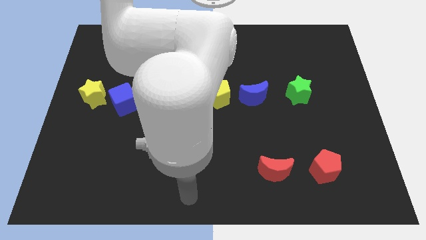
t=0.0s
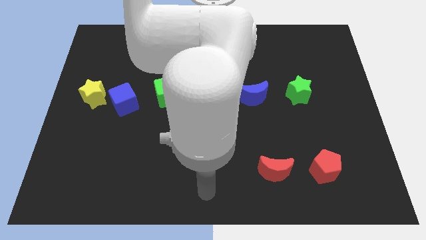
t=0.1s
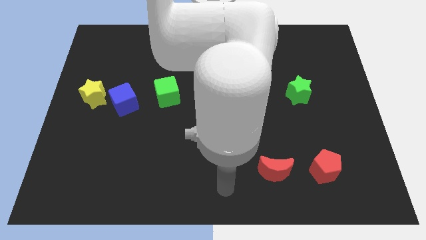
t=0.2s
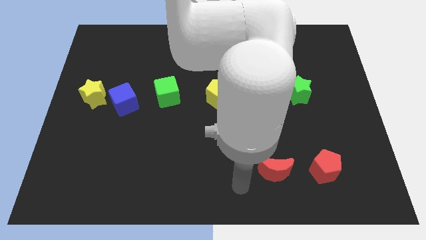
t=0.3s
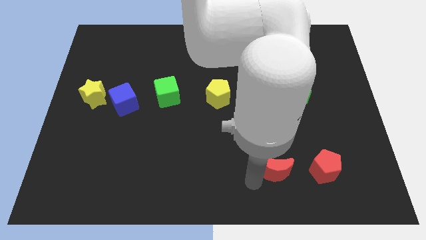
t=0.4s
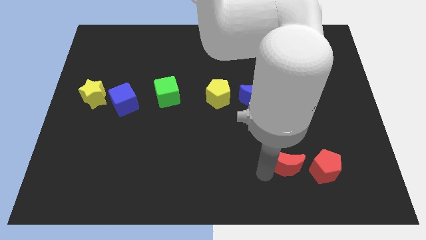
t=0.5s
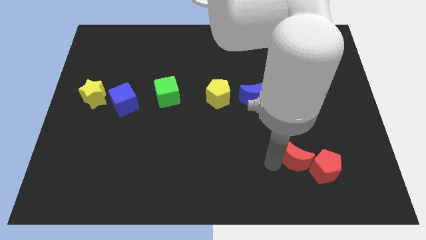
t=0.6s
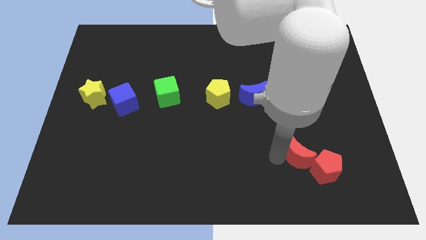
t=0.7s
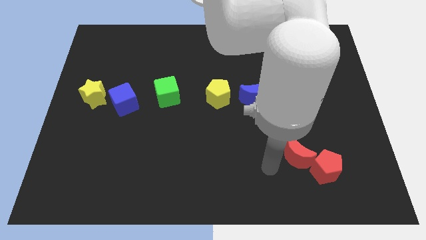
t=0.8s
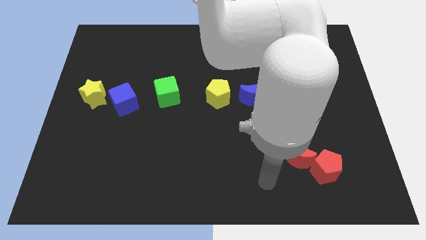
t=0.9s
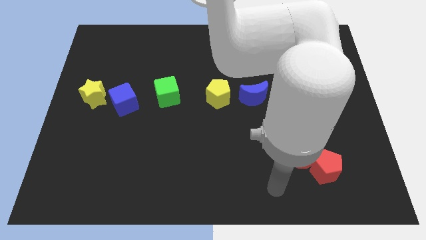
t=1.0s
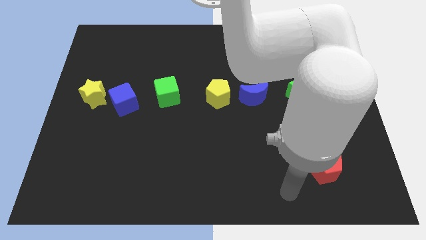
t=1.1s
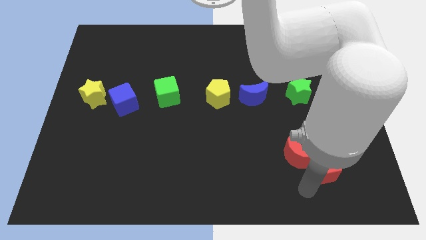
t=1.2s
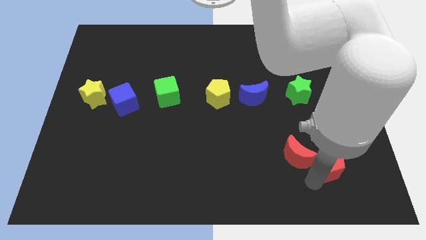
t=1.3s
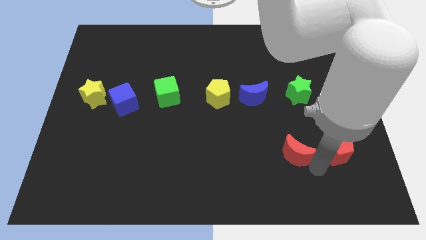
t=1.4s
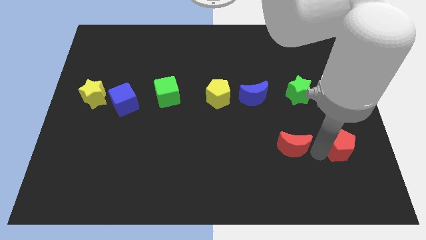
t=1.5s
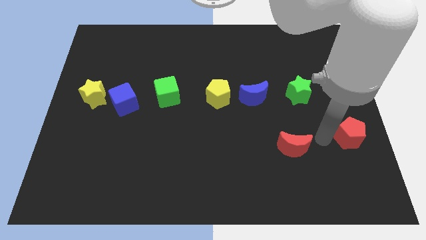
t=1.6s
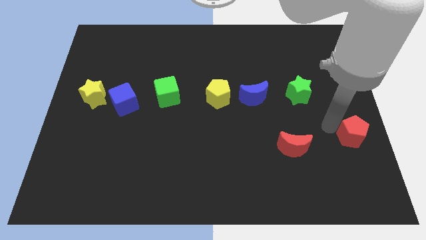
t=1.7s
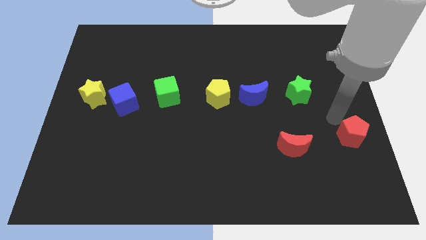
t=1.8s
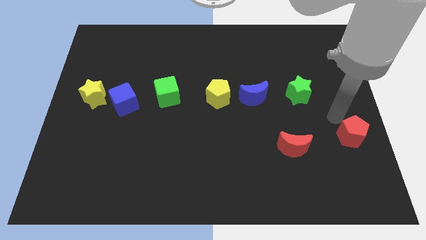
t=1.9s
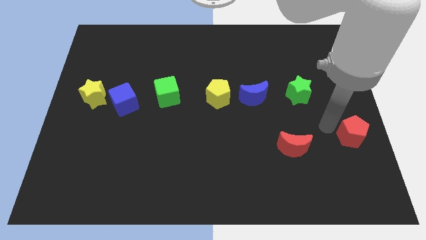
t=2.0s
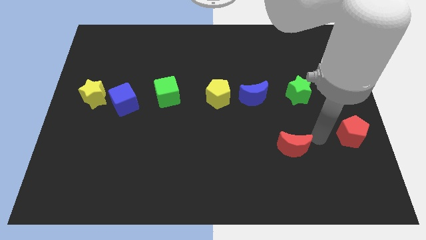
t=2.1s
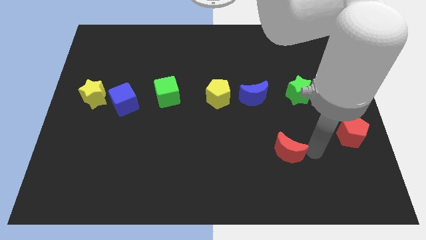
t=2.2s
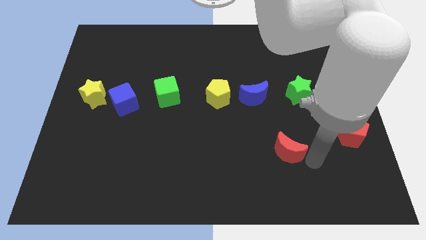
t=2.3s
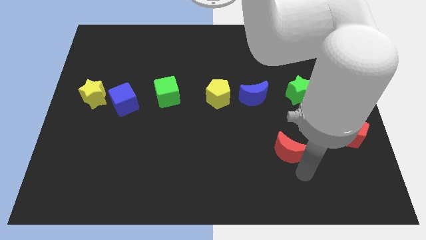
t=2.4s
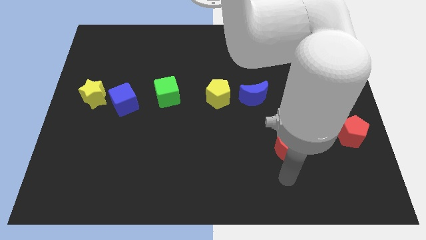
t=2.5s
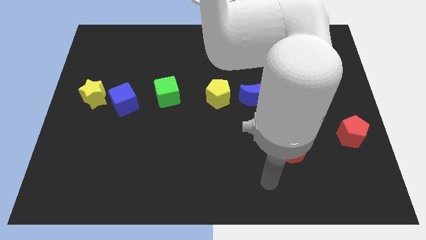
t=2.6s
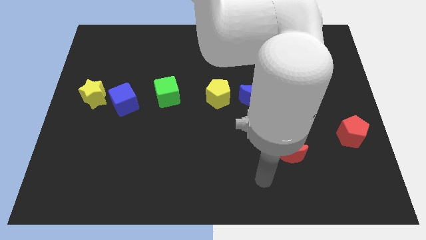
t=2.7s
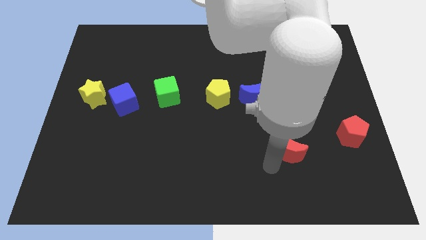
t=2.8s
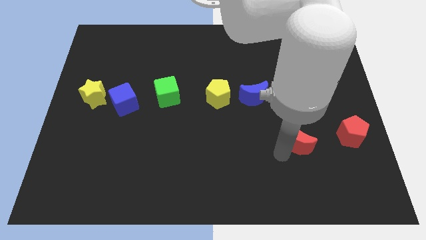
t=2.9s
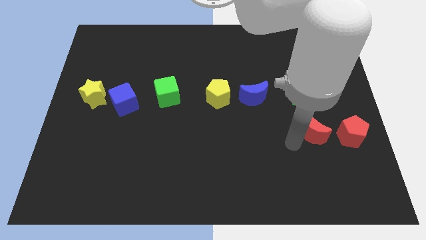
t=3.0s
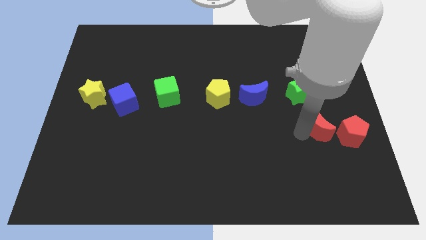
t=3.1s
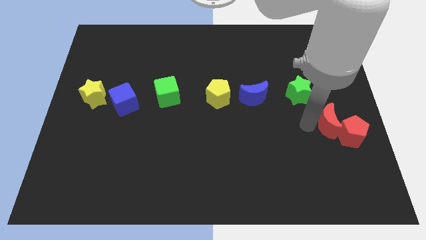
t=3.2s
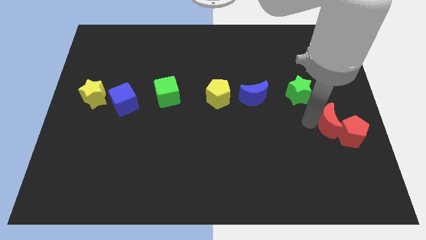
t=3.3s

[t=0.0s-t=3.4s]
place both the red blocks at the bottom right side of the green star

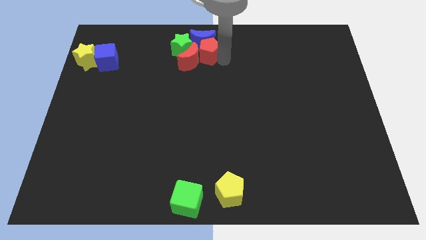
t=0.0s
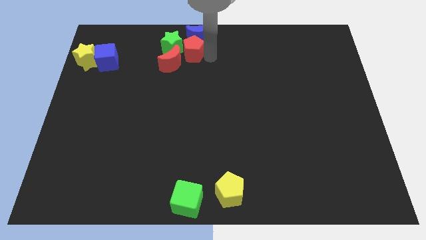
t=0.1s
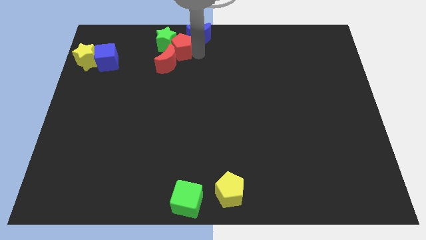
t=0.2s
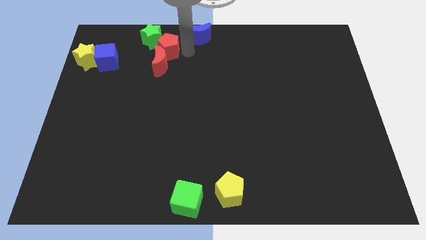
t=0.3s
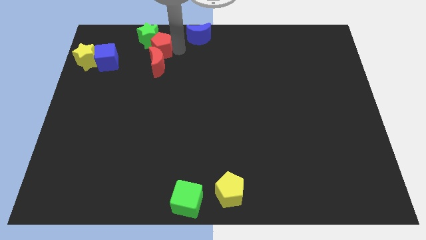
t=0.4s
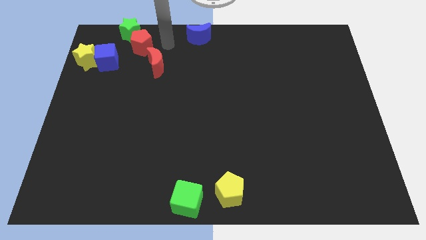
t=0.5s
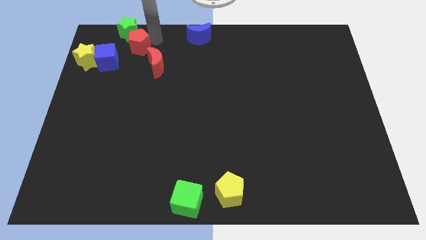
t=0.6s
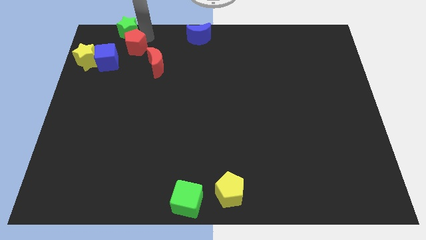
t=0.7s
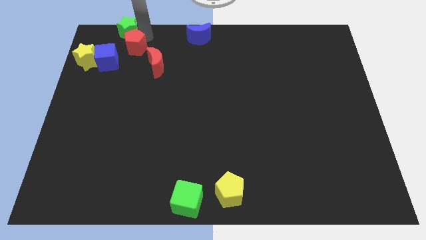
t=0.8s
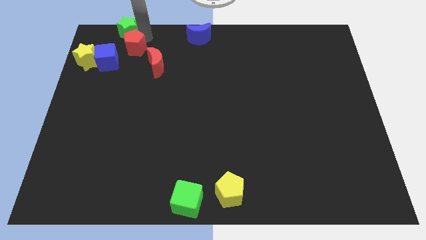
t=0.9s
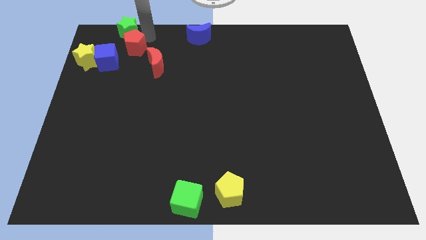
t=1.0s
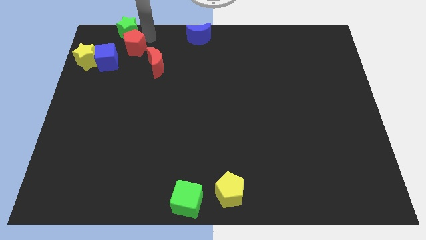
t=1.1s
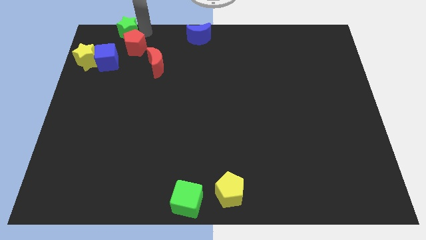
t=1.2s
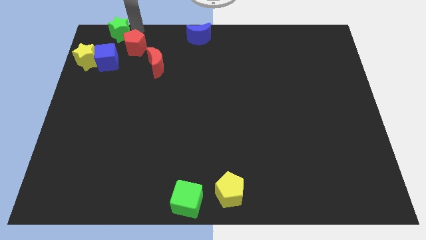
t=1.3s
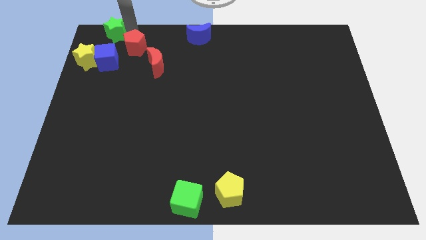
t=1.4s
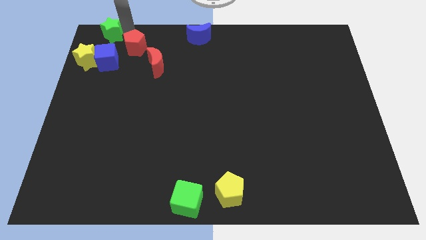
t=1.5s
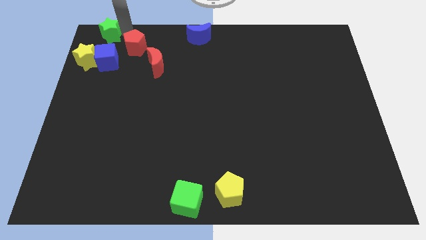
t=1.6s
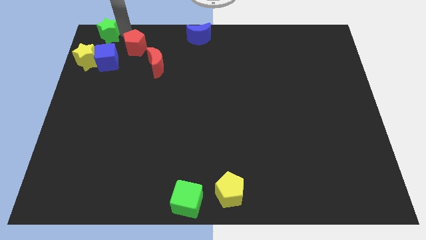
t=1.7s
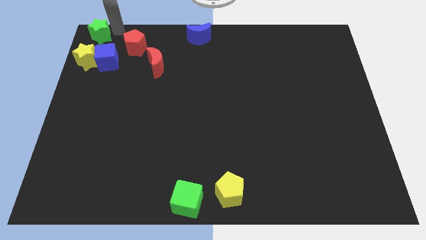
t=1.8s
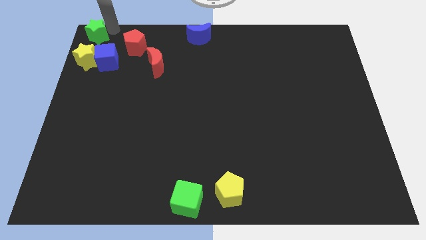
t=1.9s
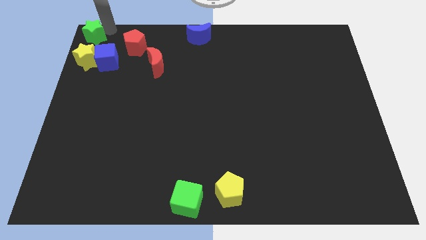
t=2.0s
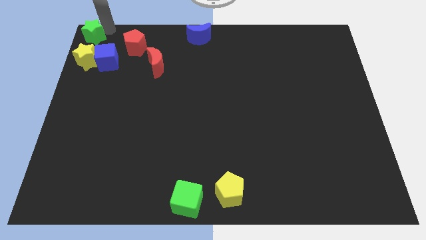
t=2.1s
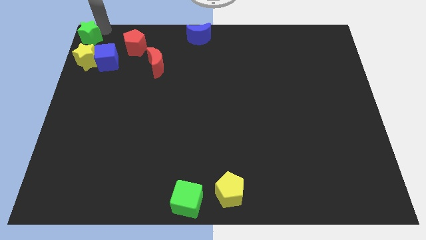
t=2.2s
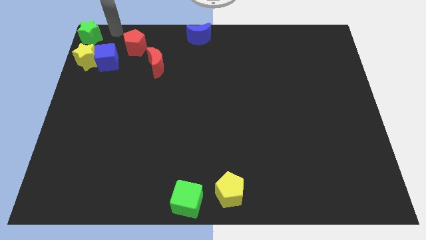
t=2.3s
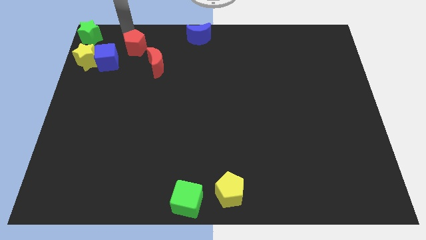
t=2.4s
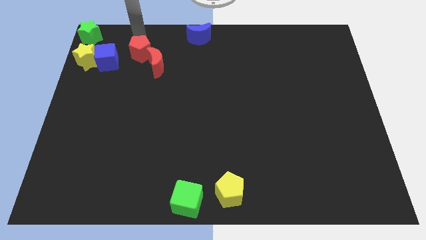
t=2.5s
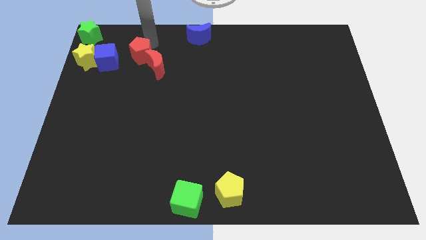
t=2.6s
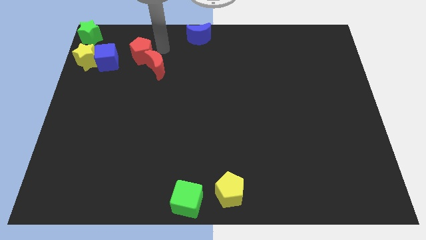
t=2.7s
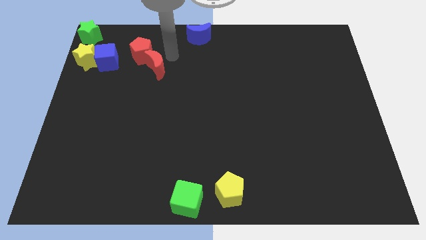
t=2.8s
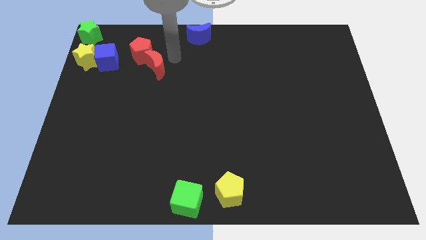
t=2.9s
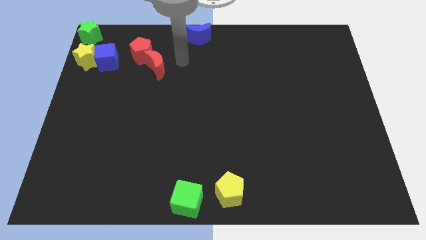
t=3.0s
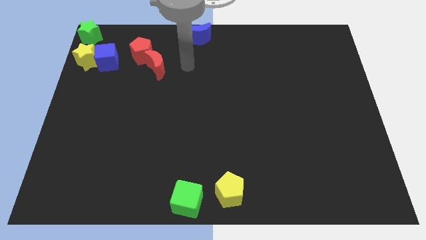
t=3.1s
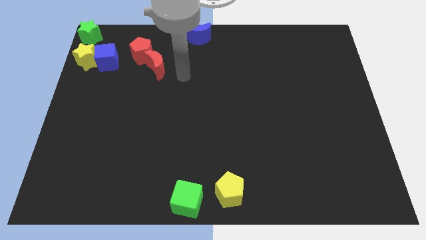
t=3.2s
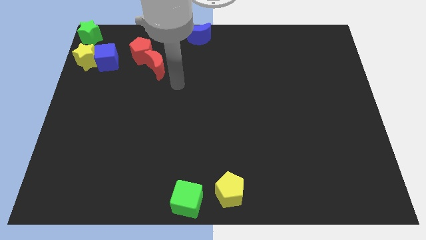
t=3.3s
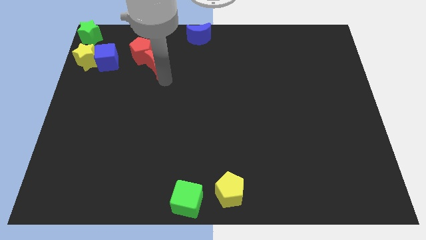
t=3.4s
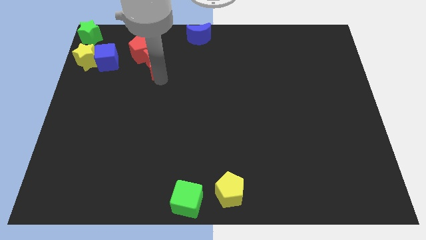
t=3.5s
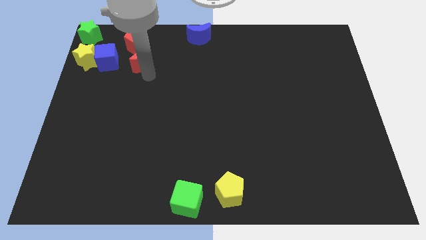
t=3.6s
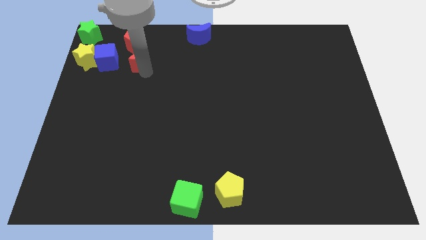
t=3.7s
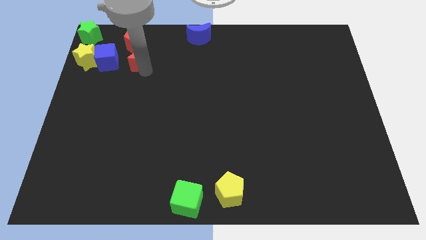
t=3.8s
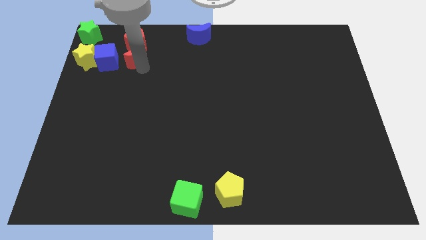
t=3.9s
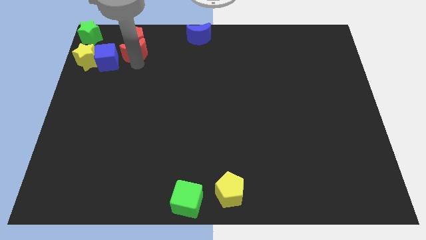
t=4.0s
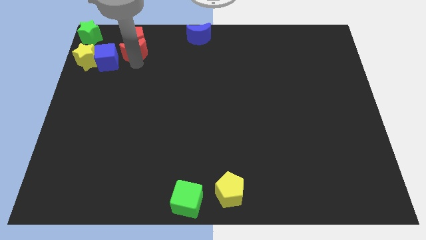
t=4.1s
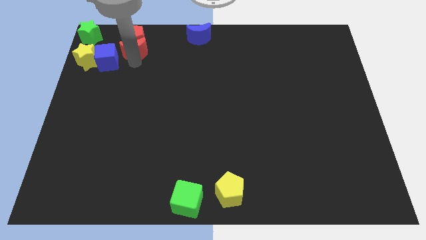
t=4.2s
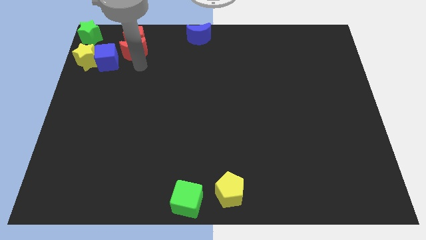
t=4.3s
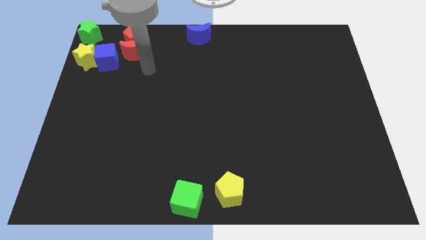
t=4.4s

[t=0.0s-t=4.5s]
push group of blocks to the left side of the board

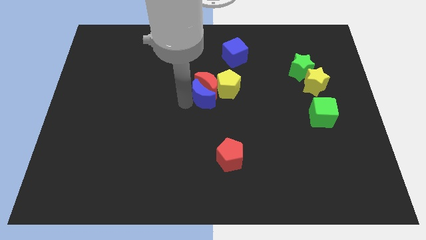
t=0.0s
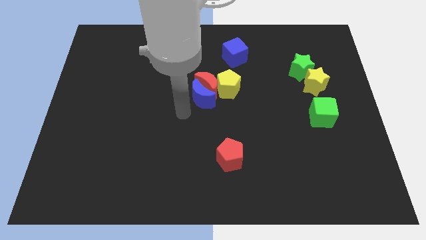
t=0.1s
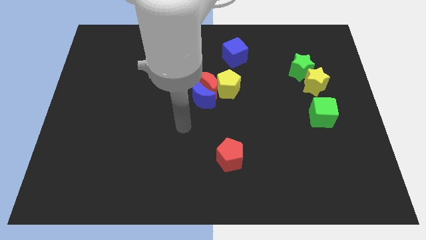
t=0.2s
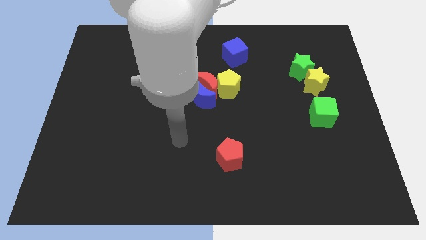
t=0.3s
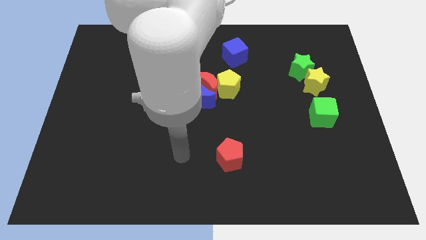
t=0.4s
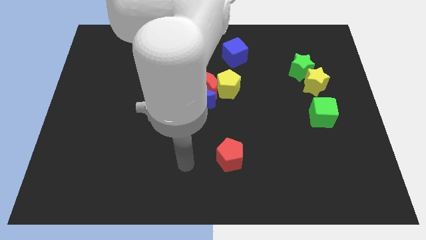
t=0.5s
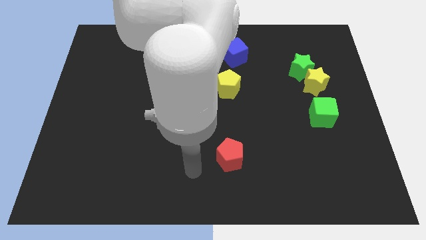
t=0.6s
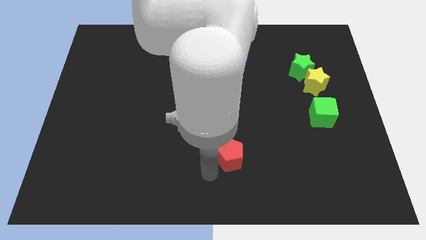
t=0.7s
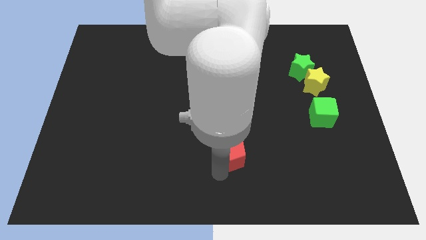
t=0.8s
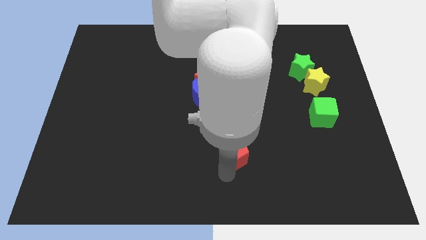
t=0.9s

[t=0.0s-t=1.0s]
place your arm to the bottom of red pentagon

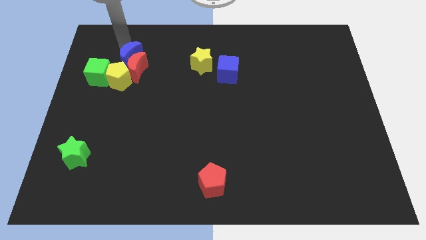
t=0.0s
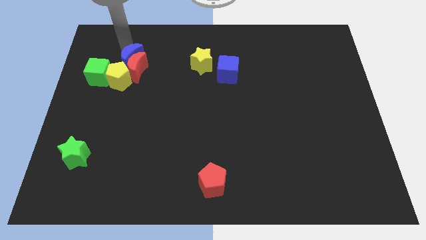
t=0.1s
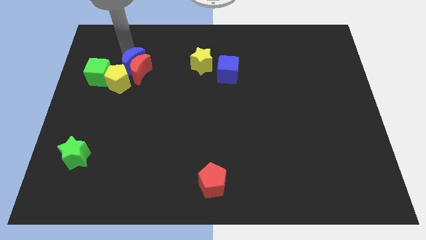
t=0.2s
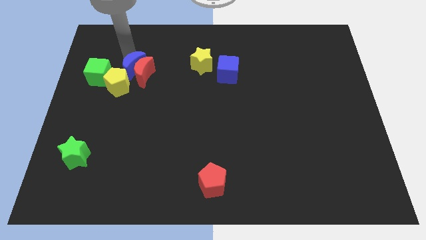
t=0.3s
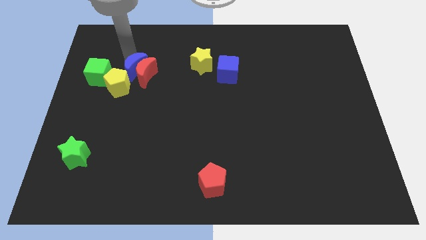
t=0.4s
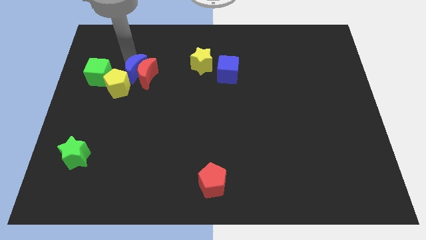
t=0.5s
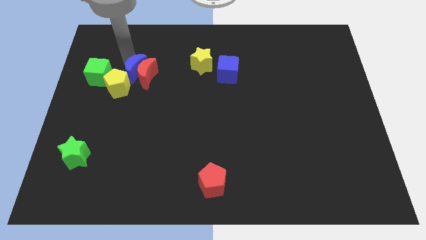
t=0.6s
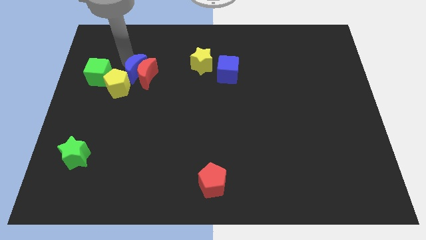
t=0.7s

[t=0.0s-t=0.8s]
push blue moon downwards
